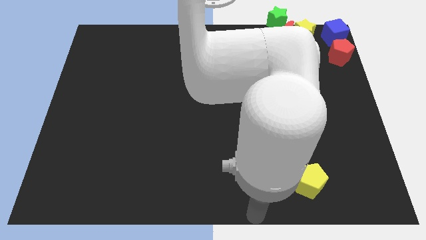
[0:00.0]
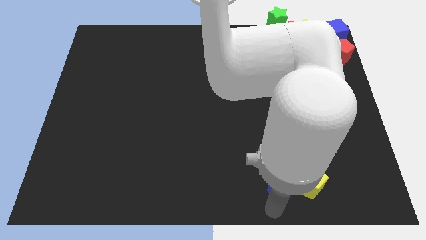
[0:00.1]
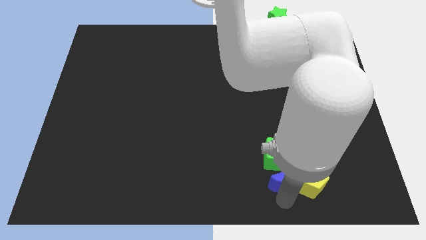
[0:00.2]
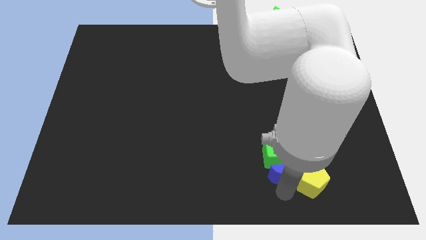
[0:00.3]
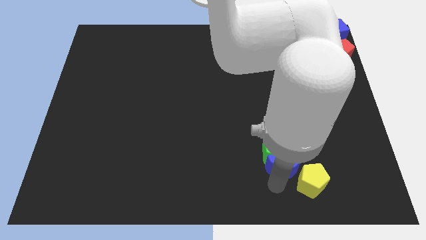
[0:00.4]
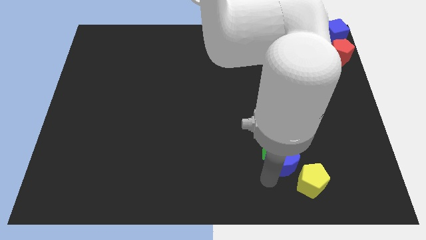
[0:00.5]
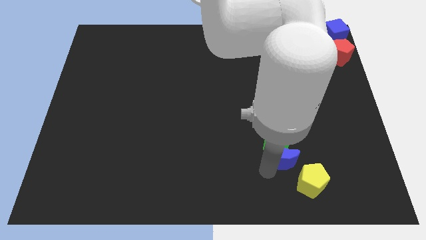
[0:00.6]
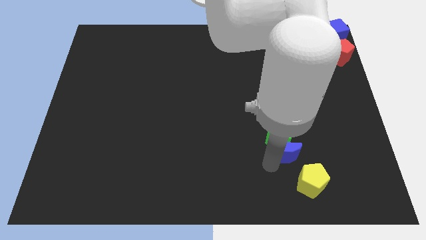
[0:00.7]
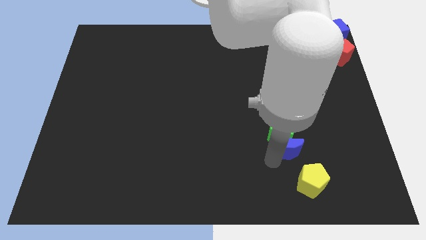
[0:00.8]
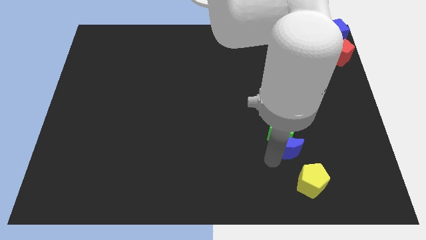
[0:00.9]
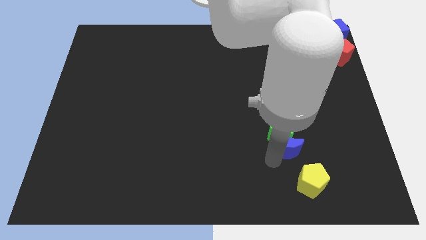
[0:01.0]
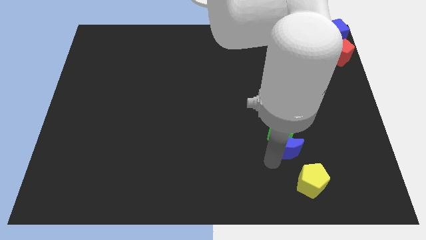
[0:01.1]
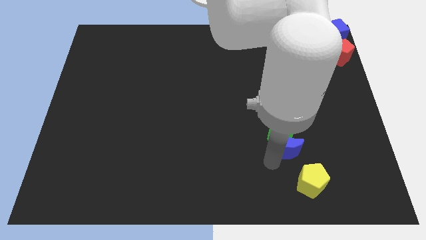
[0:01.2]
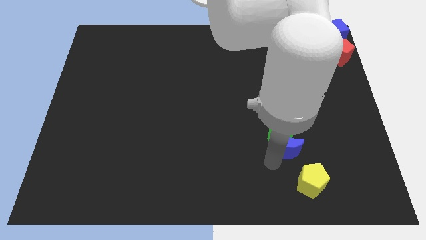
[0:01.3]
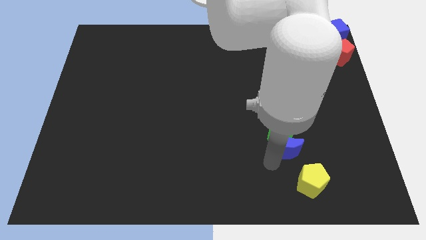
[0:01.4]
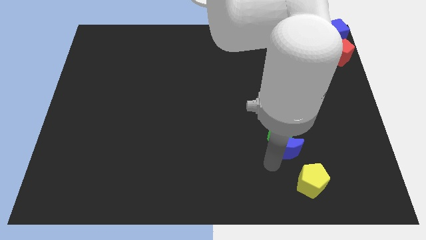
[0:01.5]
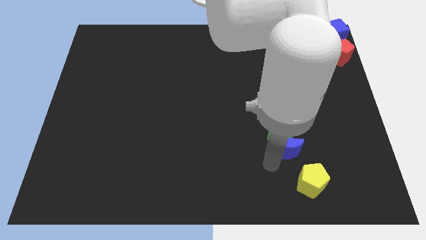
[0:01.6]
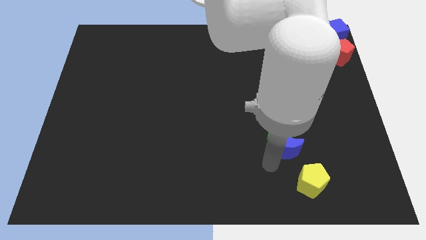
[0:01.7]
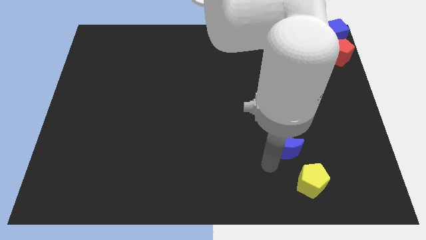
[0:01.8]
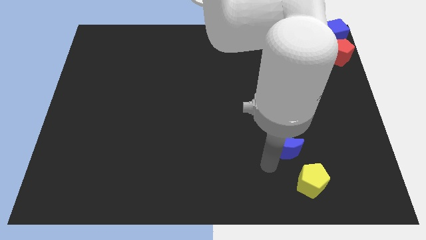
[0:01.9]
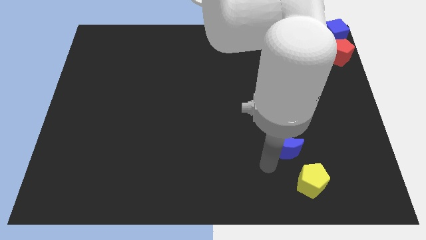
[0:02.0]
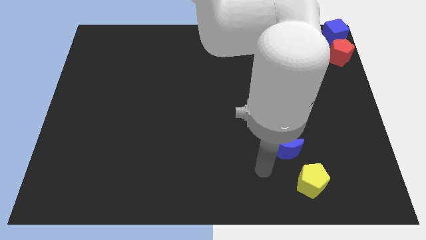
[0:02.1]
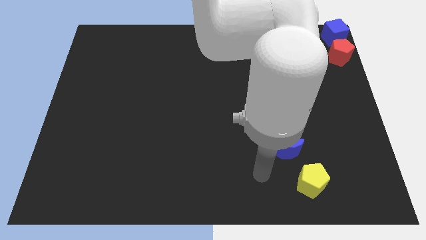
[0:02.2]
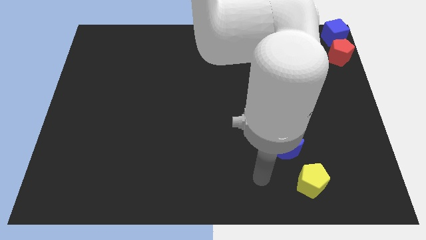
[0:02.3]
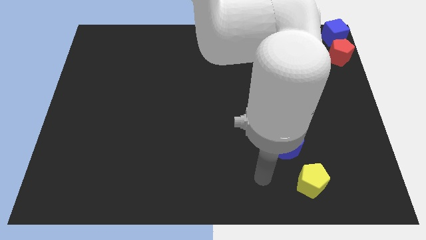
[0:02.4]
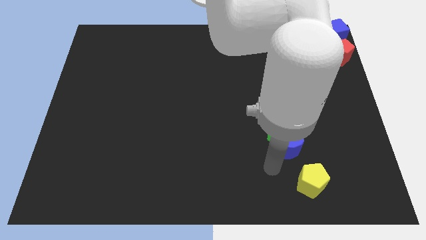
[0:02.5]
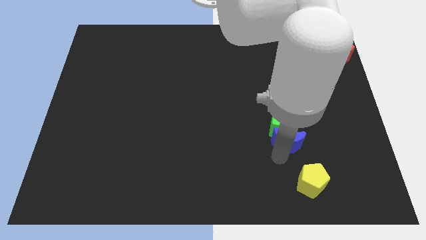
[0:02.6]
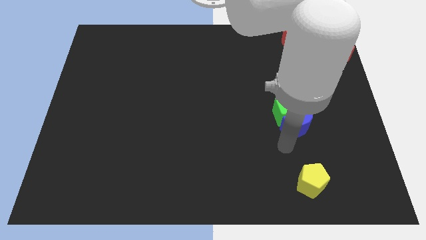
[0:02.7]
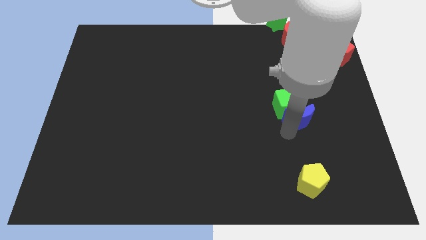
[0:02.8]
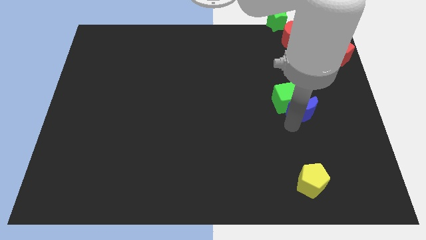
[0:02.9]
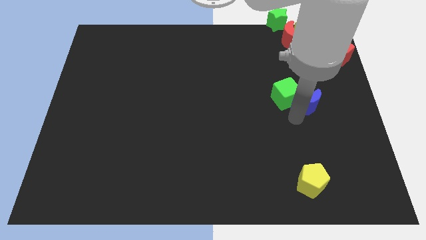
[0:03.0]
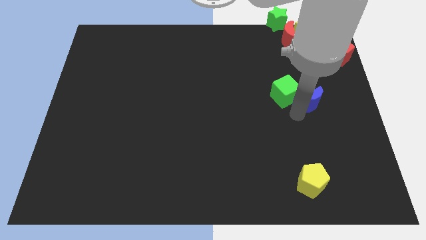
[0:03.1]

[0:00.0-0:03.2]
push the green cube with the help of blue crescent

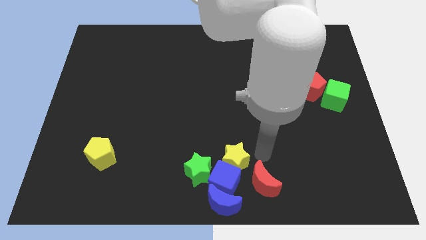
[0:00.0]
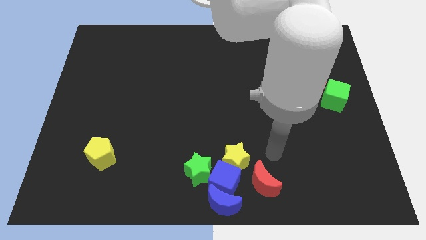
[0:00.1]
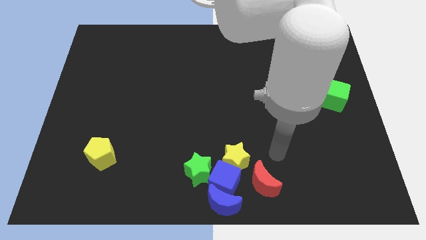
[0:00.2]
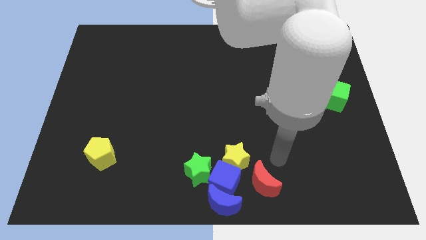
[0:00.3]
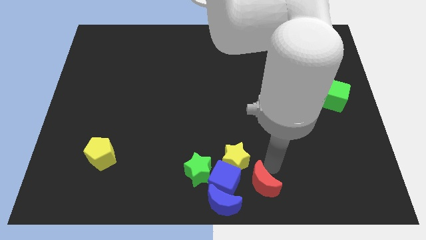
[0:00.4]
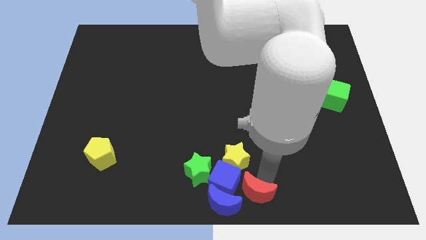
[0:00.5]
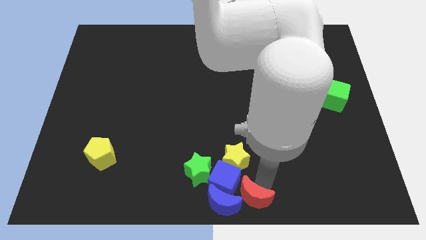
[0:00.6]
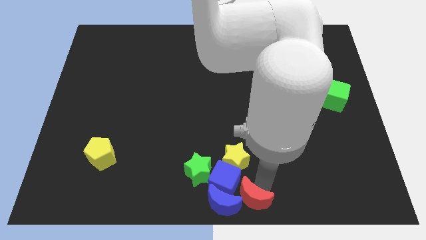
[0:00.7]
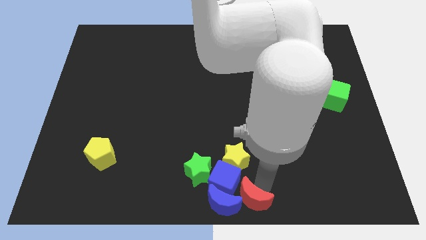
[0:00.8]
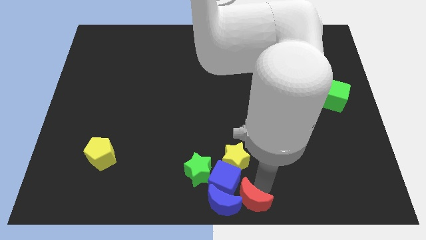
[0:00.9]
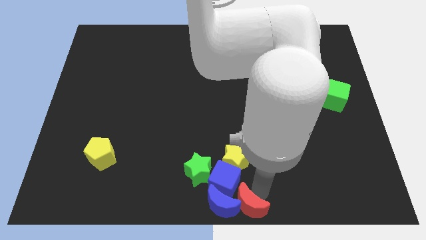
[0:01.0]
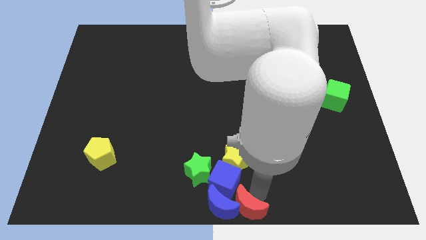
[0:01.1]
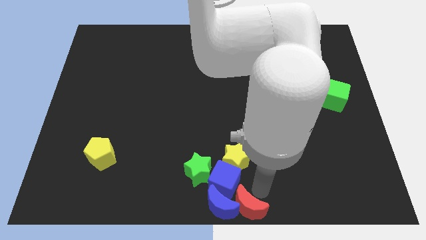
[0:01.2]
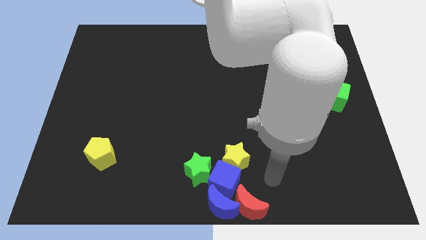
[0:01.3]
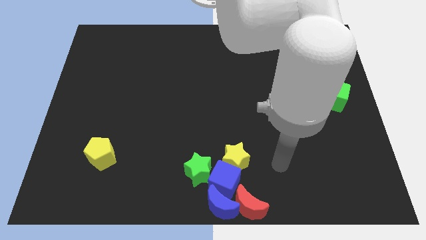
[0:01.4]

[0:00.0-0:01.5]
push the red moon into blue blocks at the bottom

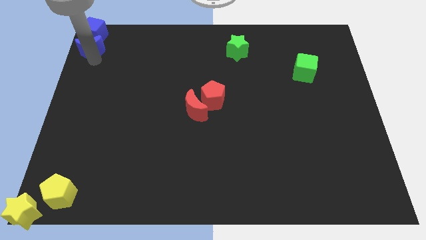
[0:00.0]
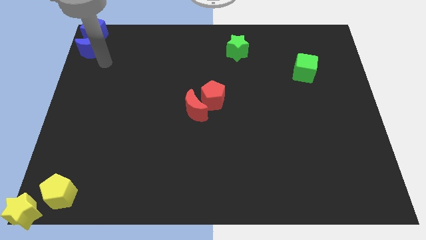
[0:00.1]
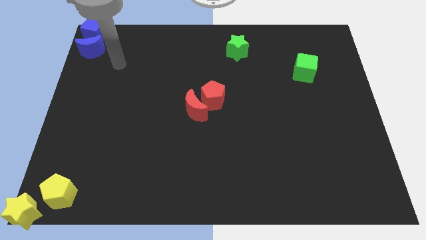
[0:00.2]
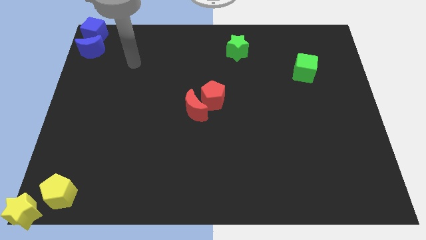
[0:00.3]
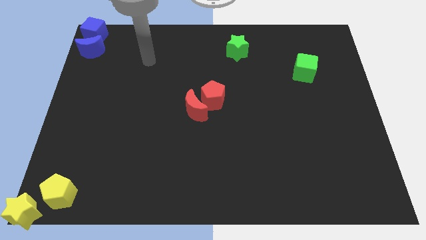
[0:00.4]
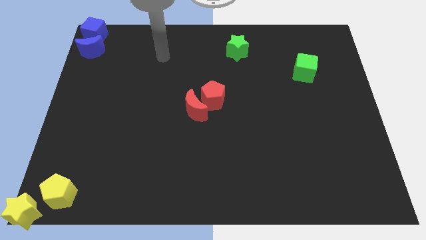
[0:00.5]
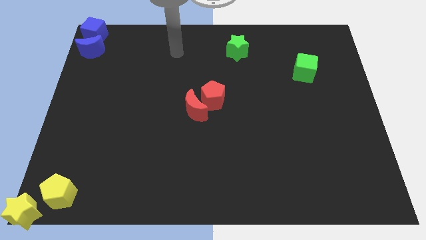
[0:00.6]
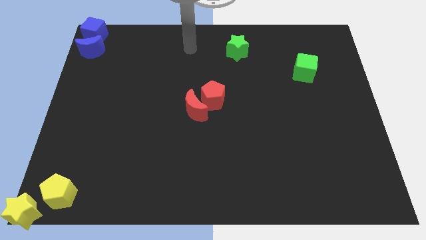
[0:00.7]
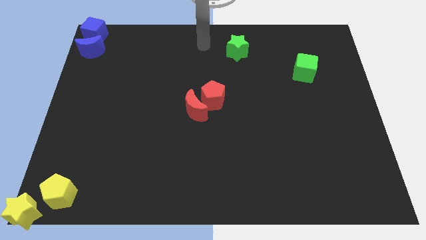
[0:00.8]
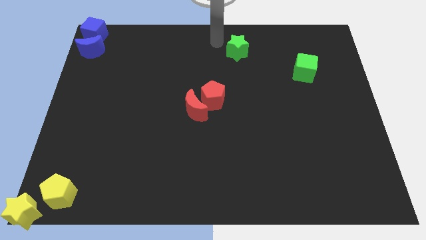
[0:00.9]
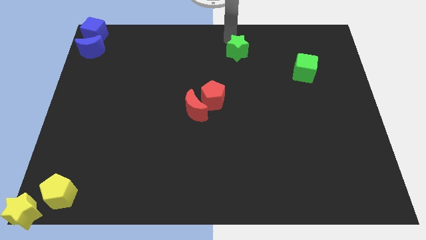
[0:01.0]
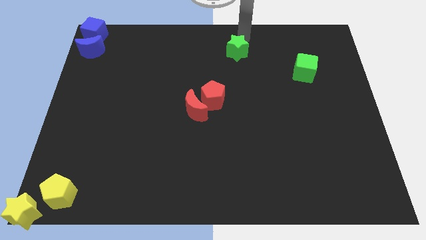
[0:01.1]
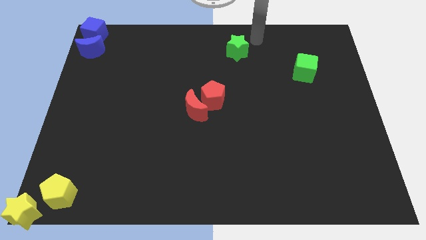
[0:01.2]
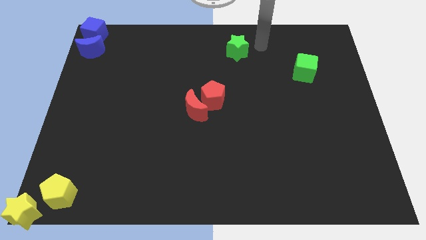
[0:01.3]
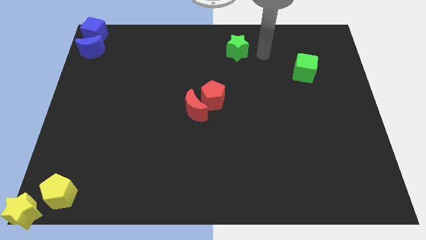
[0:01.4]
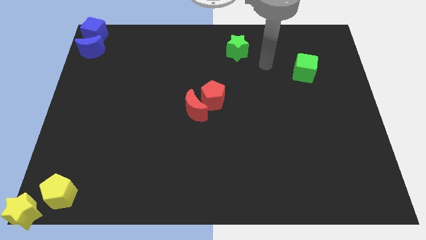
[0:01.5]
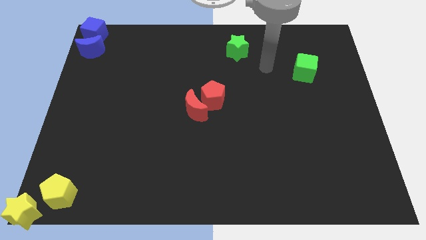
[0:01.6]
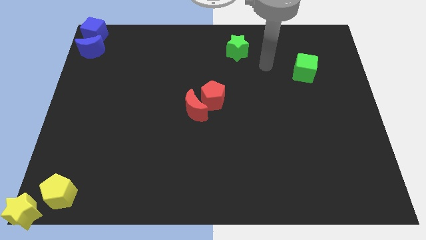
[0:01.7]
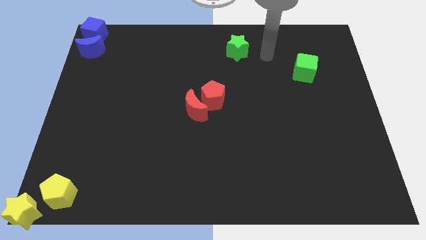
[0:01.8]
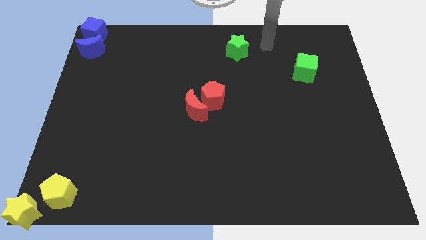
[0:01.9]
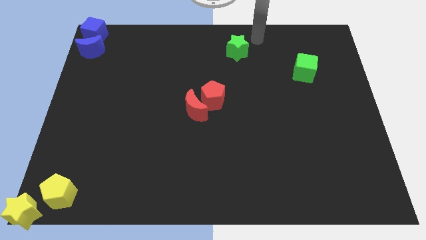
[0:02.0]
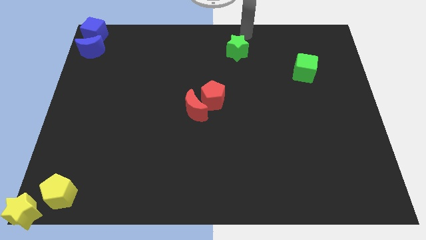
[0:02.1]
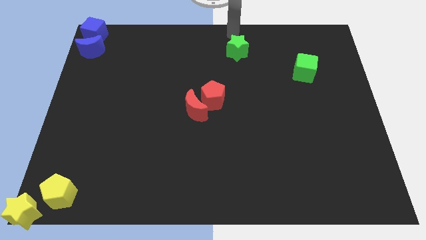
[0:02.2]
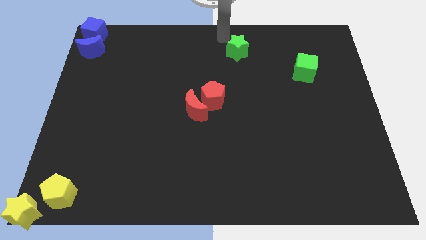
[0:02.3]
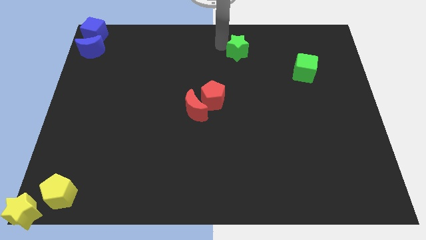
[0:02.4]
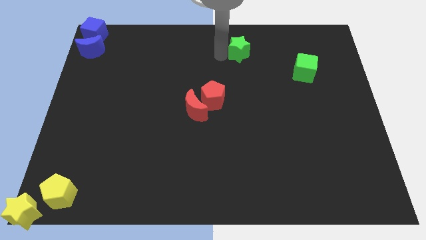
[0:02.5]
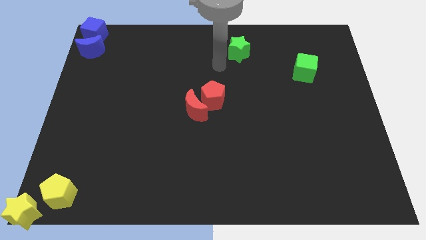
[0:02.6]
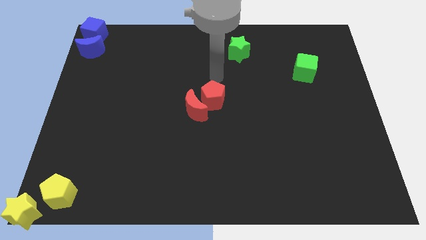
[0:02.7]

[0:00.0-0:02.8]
touch the green star

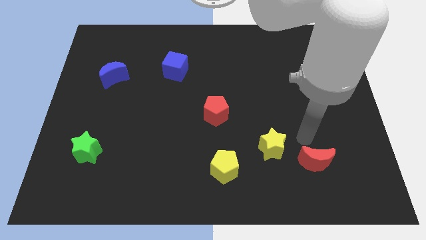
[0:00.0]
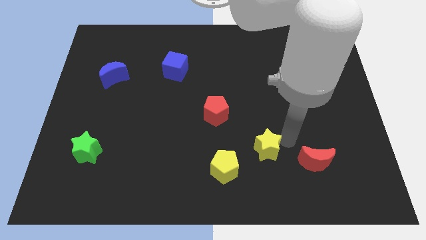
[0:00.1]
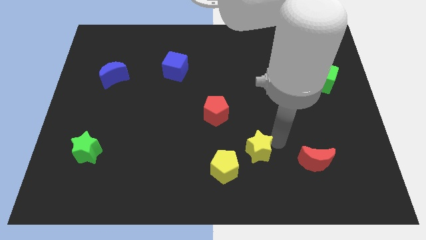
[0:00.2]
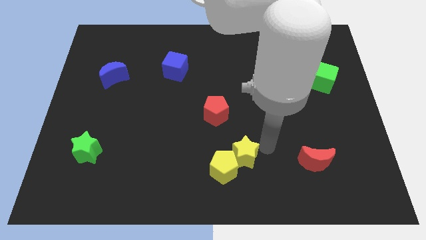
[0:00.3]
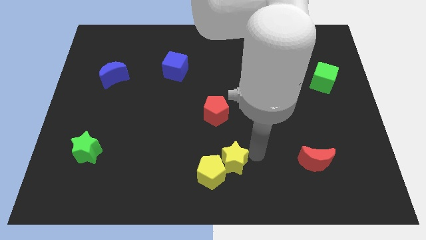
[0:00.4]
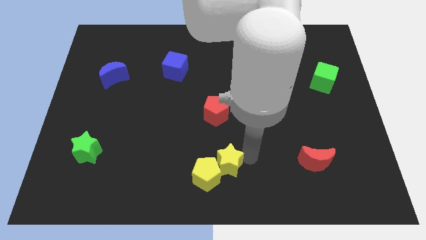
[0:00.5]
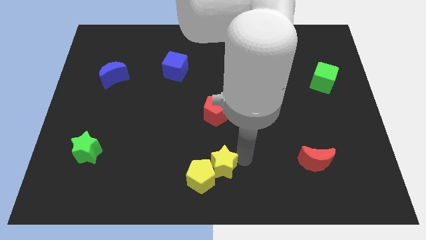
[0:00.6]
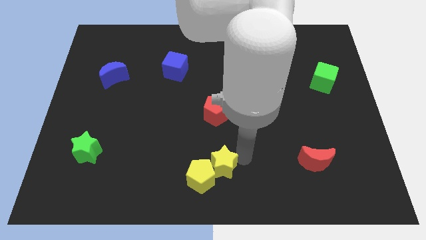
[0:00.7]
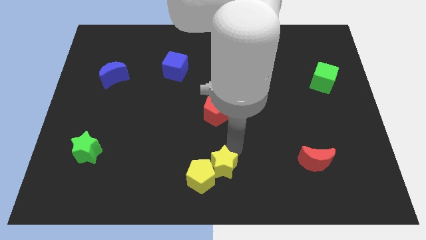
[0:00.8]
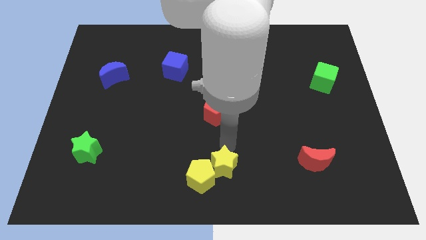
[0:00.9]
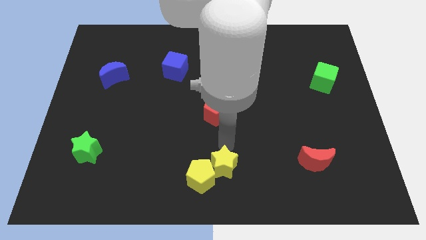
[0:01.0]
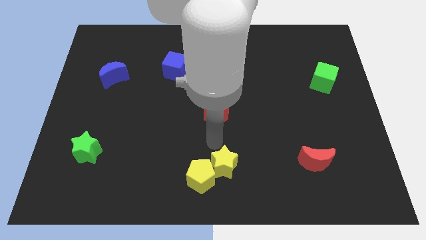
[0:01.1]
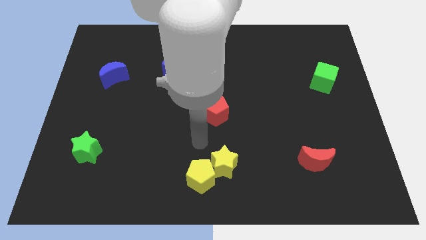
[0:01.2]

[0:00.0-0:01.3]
move the yellow star to the top right of the yellow pentagon

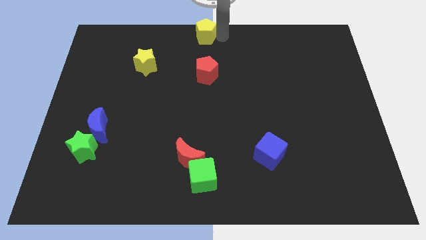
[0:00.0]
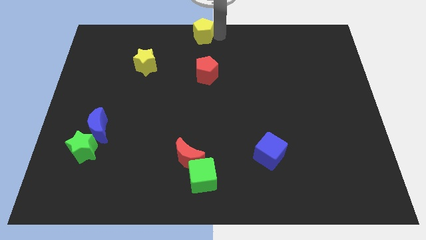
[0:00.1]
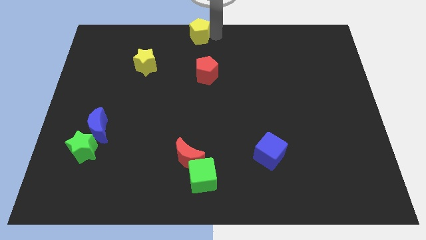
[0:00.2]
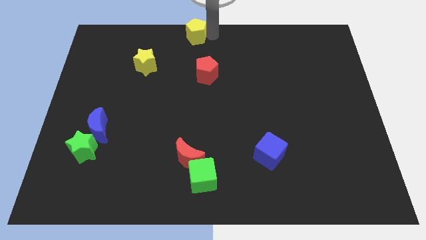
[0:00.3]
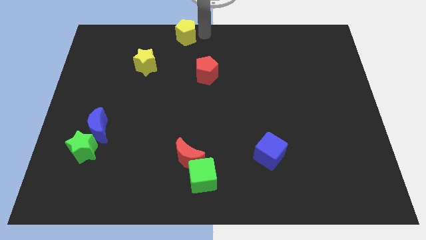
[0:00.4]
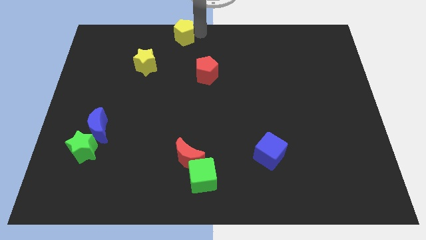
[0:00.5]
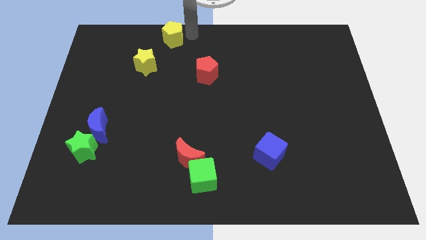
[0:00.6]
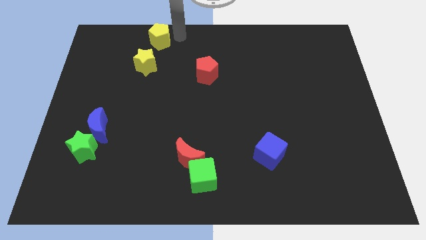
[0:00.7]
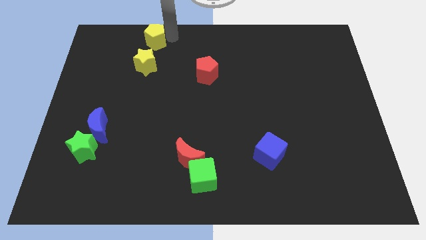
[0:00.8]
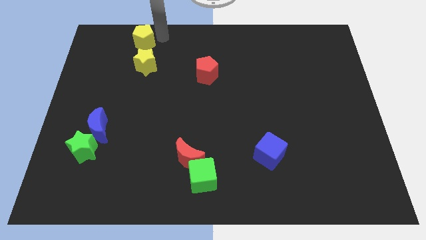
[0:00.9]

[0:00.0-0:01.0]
move the yellow pentagon to the top of the yellow star
